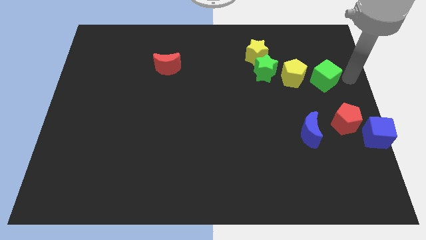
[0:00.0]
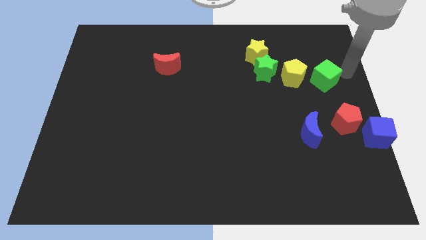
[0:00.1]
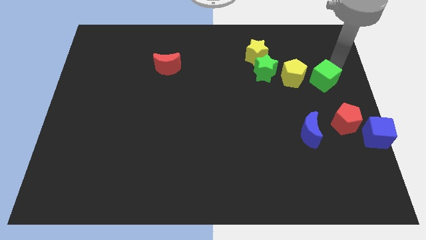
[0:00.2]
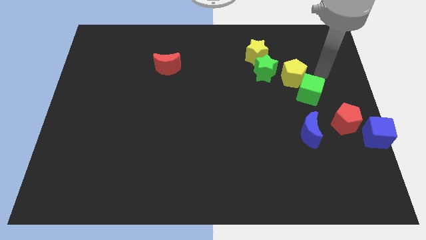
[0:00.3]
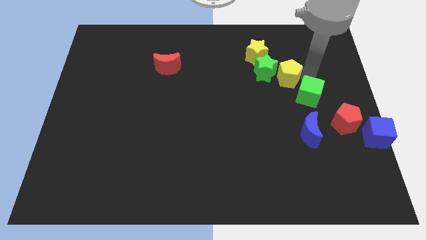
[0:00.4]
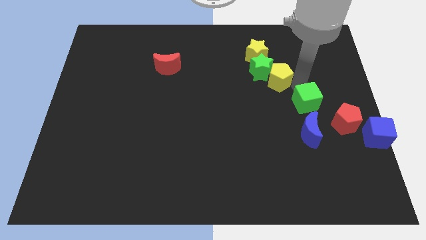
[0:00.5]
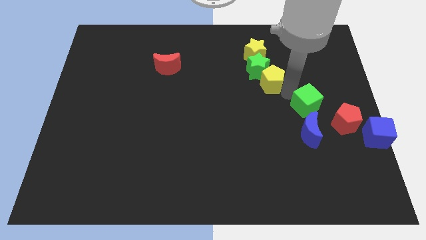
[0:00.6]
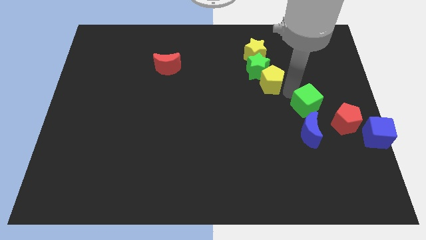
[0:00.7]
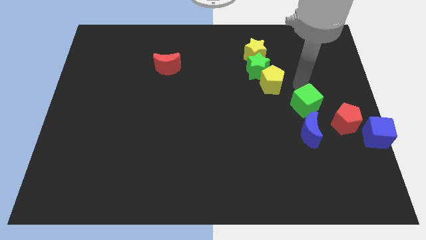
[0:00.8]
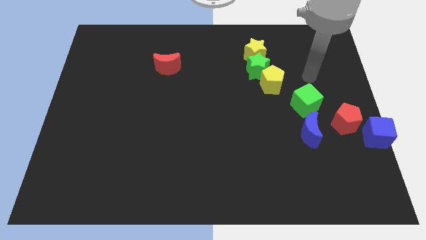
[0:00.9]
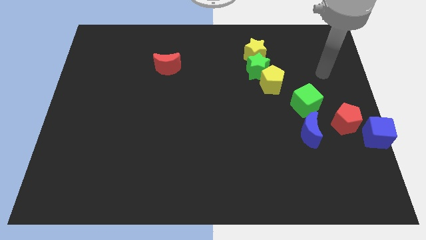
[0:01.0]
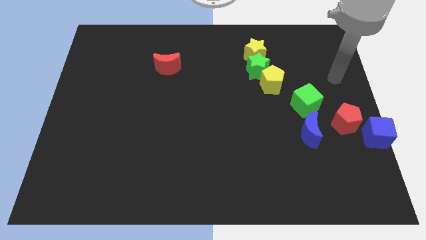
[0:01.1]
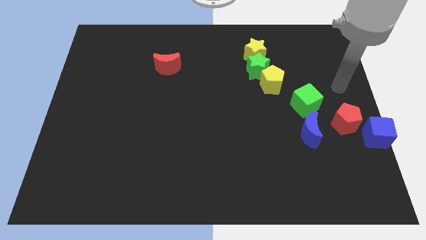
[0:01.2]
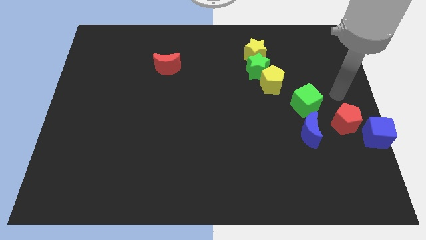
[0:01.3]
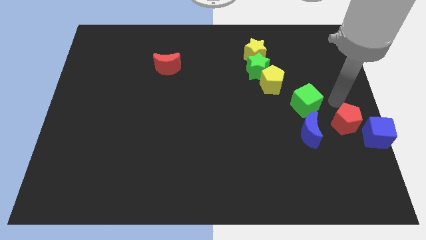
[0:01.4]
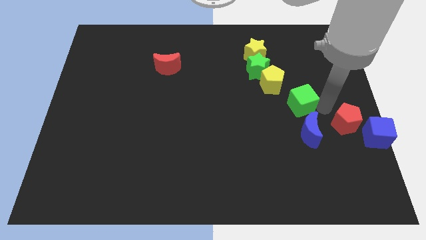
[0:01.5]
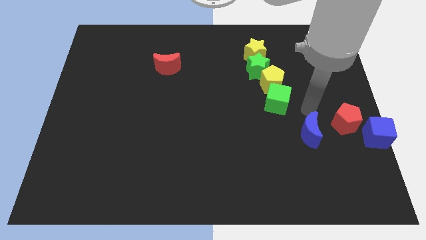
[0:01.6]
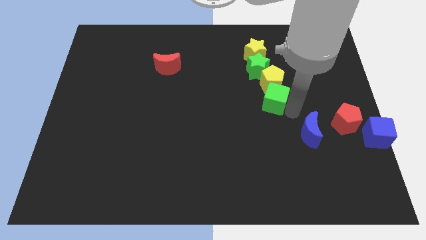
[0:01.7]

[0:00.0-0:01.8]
push the green cube to the bottom of the yellow pentagon

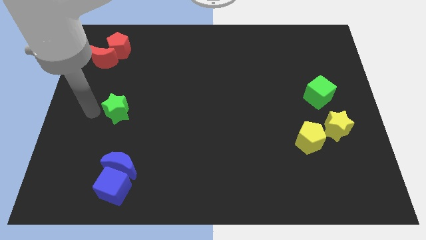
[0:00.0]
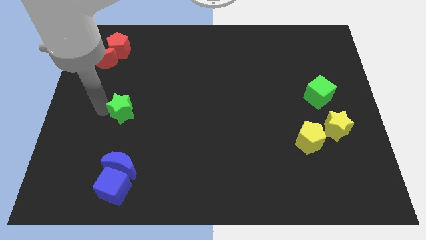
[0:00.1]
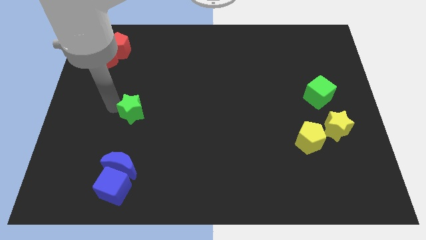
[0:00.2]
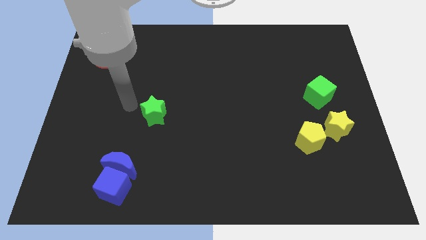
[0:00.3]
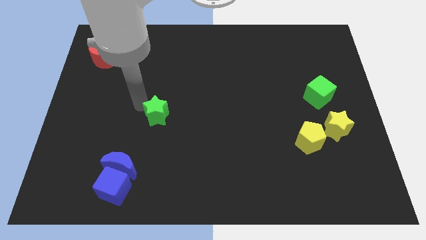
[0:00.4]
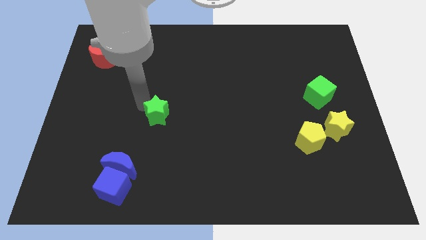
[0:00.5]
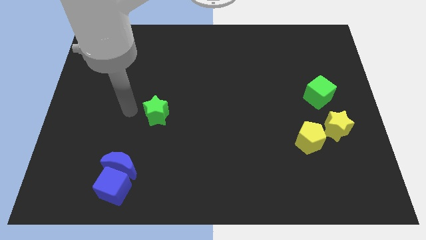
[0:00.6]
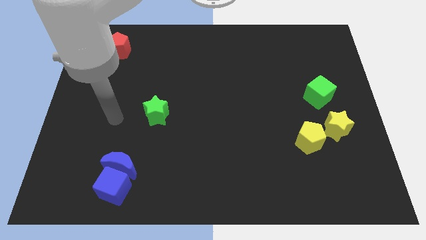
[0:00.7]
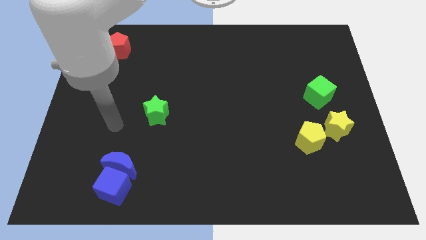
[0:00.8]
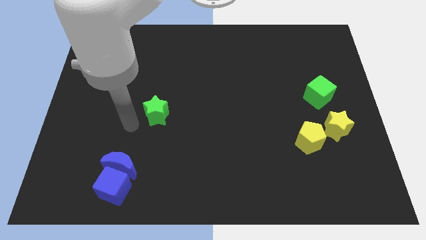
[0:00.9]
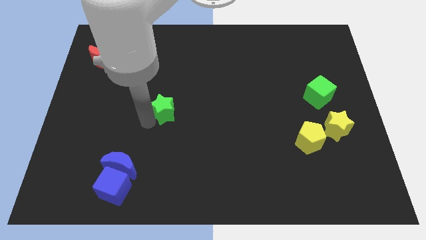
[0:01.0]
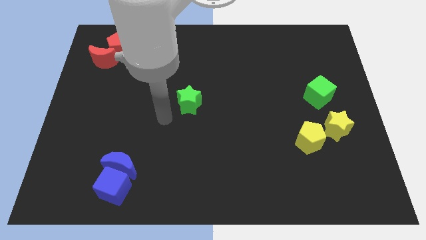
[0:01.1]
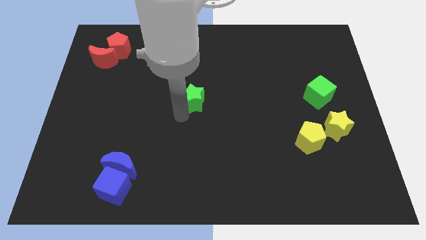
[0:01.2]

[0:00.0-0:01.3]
place the green star at center of the board

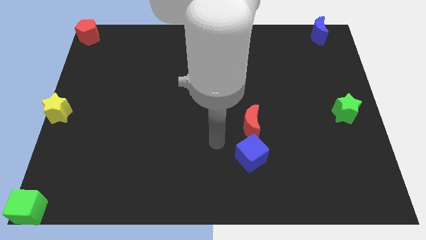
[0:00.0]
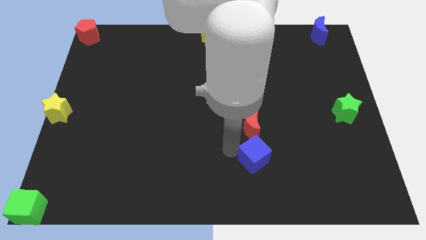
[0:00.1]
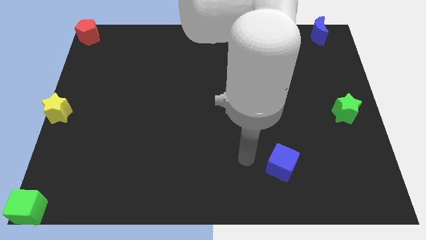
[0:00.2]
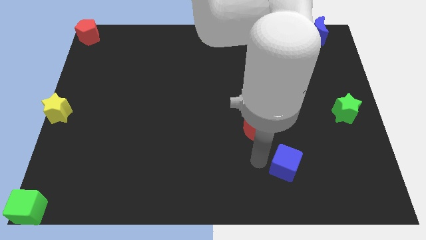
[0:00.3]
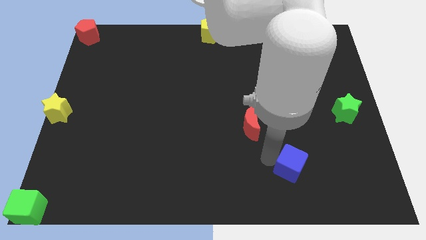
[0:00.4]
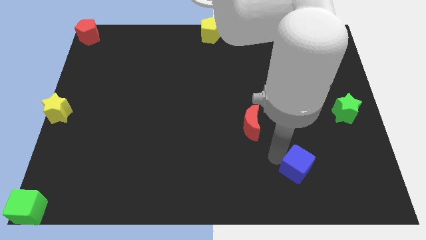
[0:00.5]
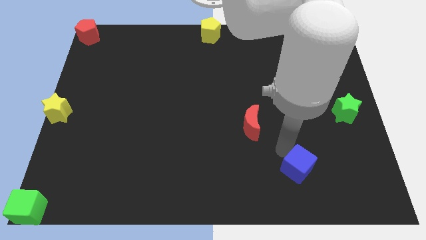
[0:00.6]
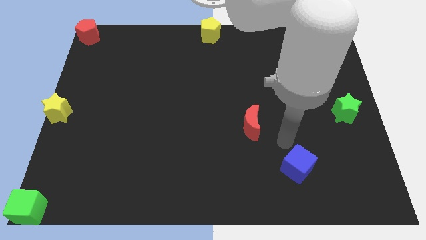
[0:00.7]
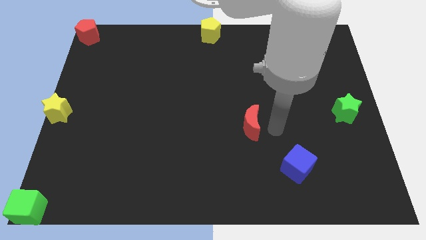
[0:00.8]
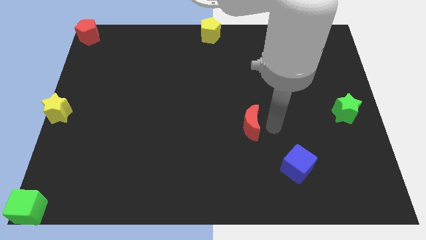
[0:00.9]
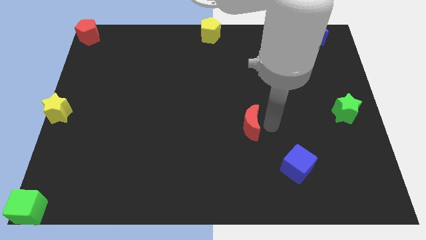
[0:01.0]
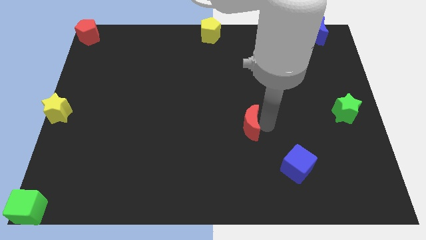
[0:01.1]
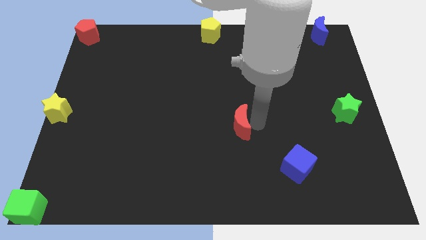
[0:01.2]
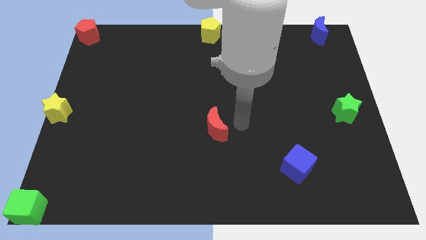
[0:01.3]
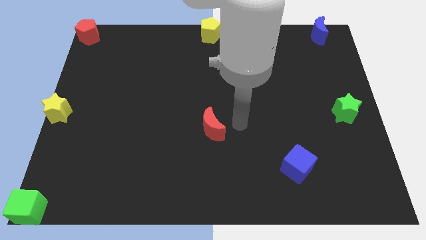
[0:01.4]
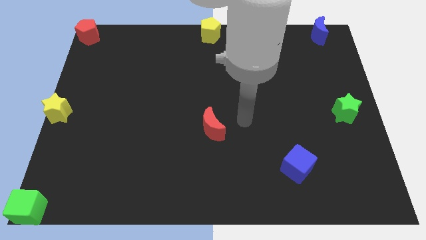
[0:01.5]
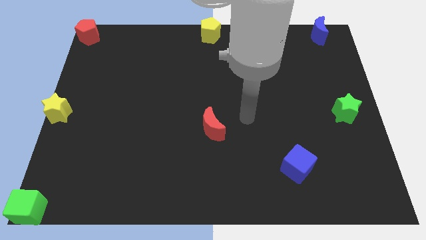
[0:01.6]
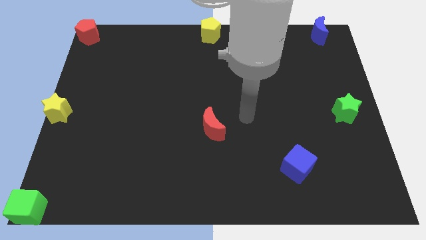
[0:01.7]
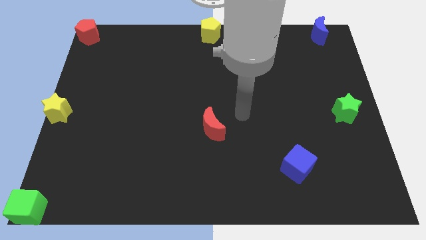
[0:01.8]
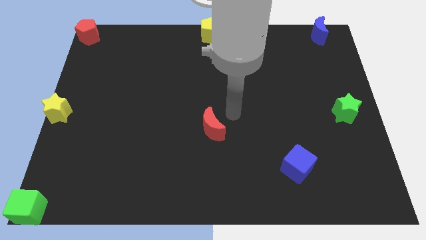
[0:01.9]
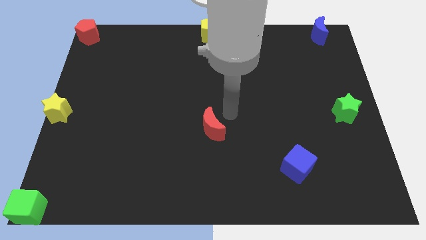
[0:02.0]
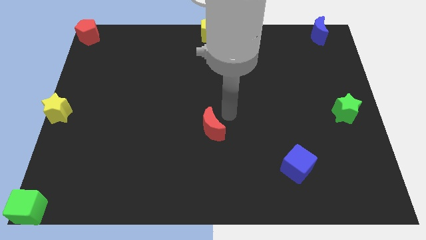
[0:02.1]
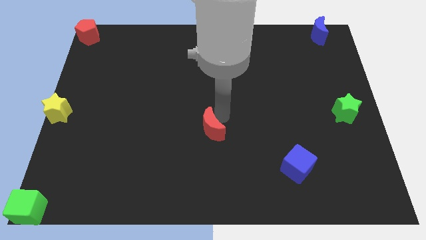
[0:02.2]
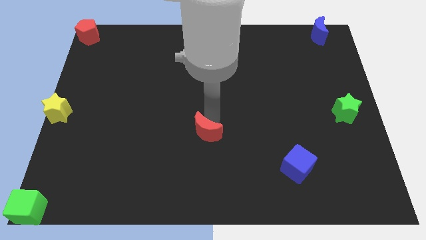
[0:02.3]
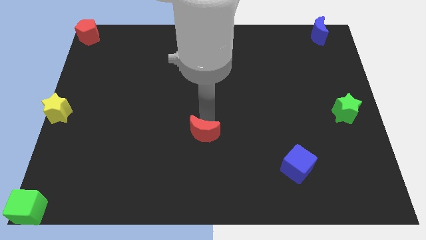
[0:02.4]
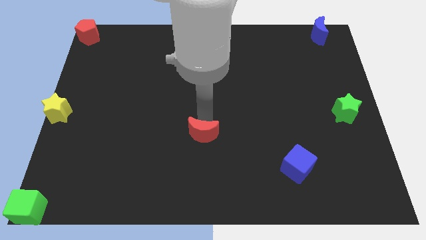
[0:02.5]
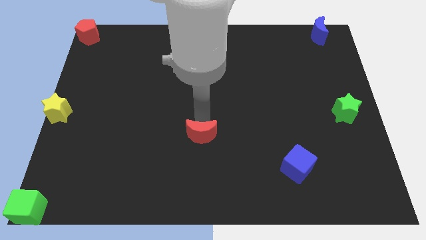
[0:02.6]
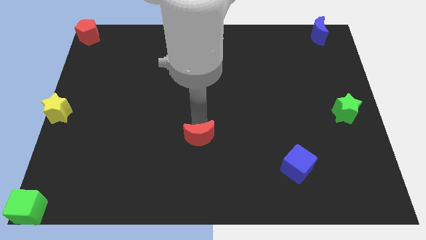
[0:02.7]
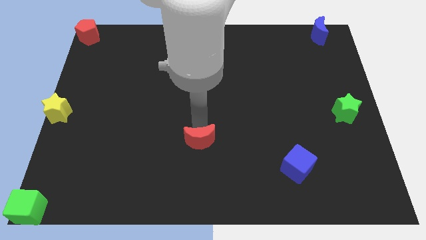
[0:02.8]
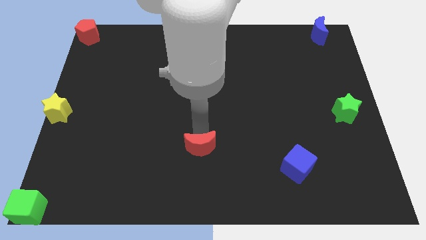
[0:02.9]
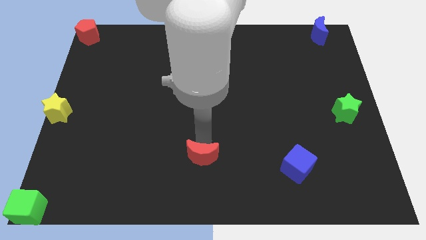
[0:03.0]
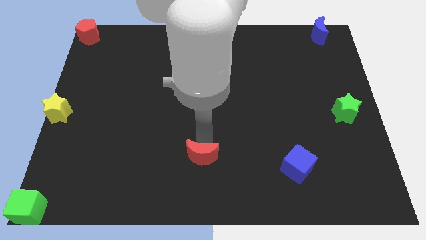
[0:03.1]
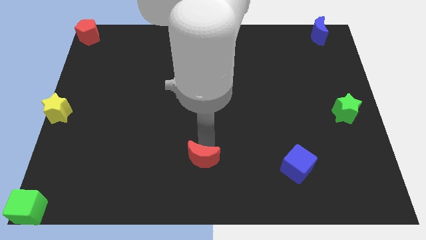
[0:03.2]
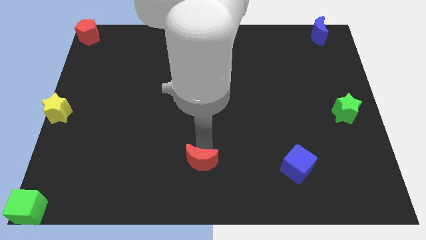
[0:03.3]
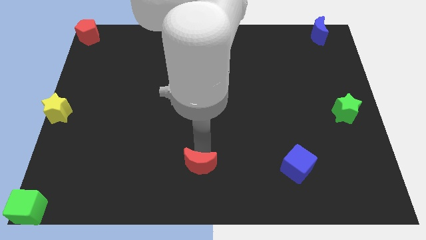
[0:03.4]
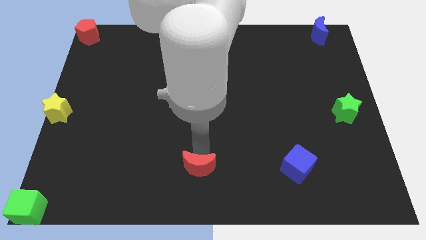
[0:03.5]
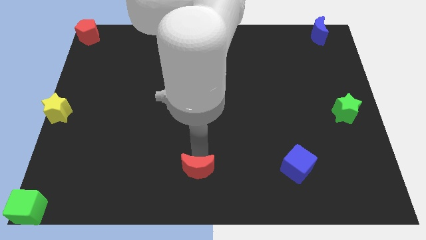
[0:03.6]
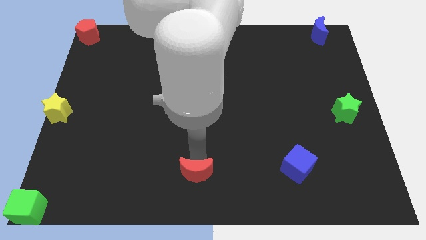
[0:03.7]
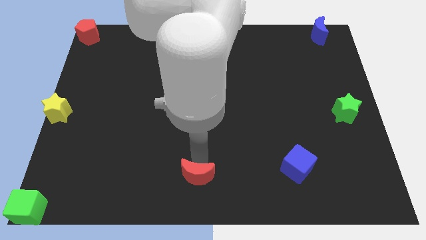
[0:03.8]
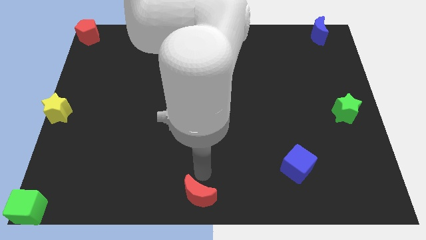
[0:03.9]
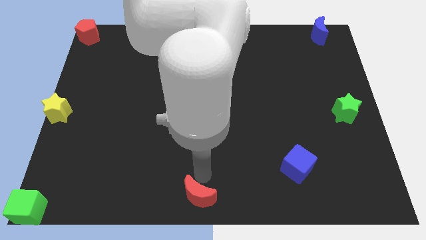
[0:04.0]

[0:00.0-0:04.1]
push the blue cube and red moon downward

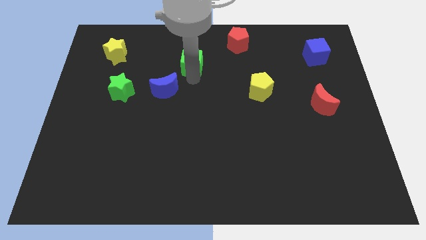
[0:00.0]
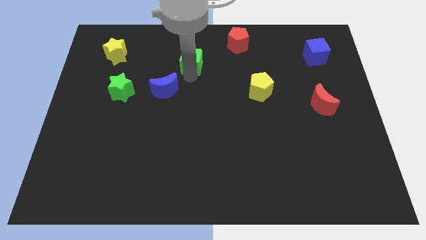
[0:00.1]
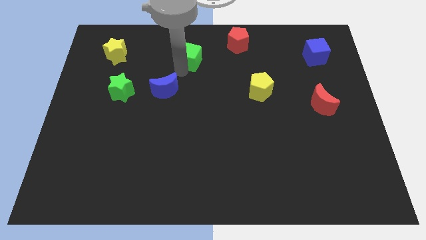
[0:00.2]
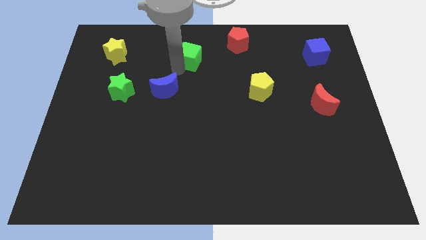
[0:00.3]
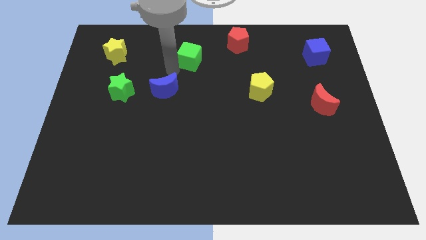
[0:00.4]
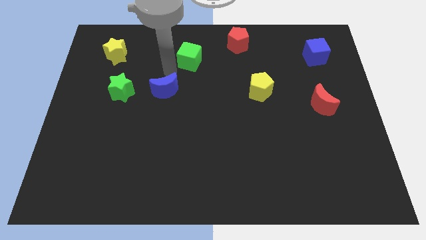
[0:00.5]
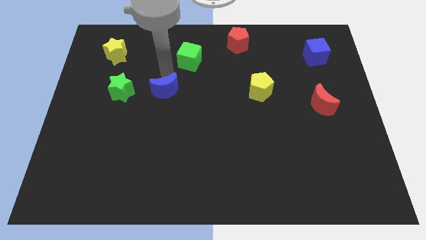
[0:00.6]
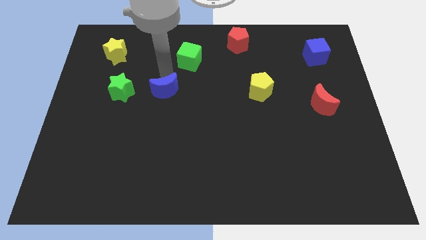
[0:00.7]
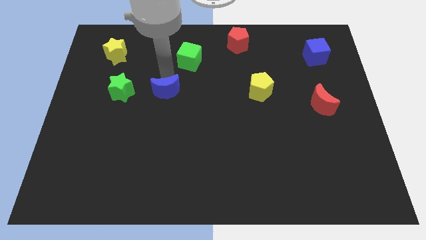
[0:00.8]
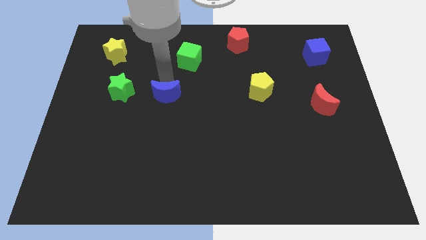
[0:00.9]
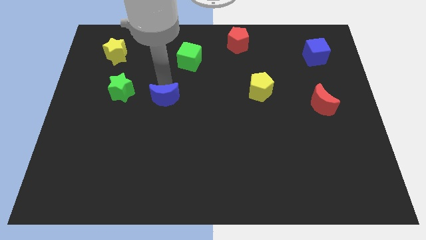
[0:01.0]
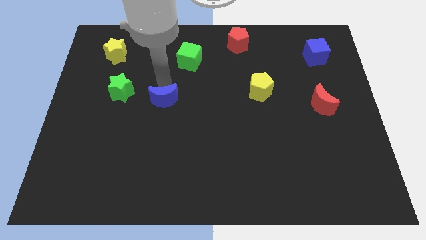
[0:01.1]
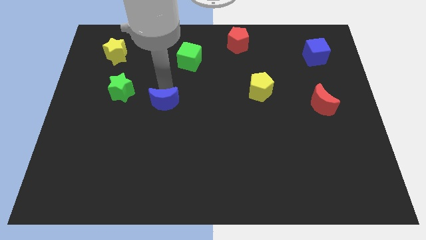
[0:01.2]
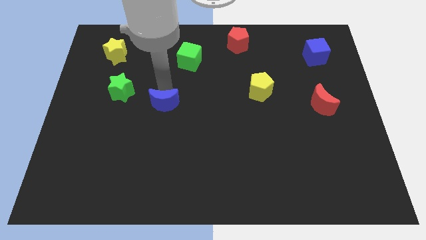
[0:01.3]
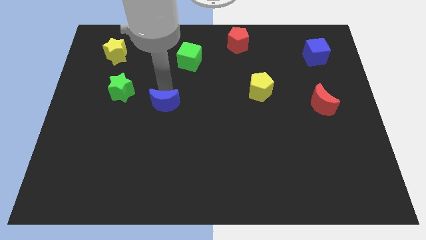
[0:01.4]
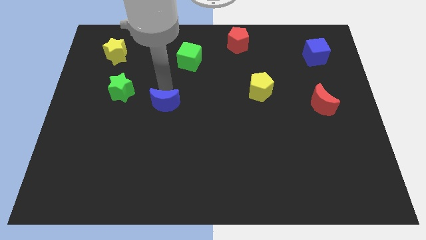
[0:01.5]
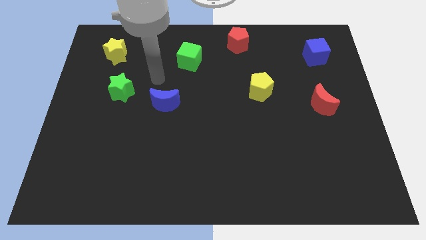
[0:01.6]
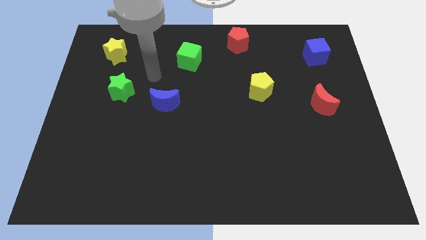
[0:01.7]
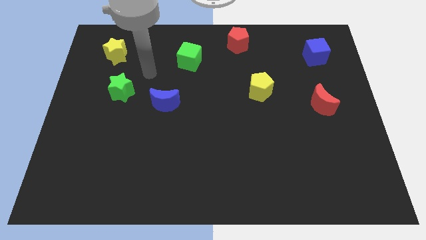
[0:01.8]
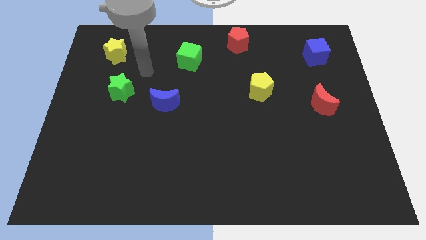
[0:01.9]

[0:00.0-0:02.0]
push the blue moon slightly to the bottom side of the board
